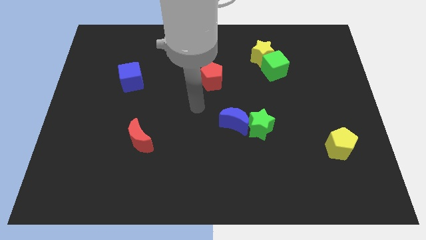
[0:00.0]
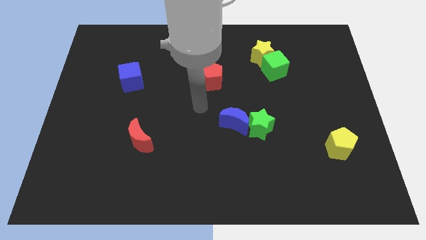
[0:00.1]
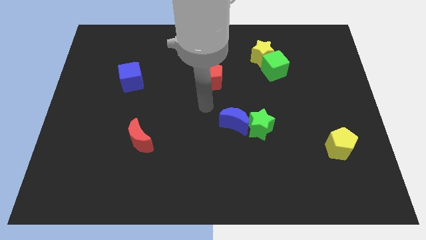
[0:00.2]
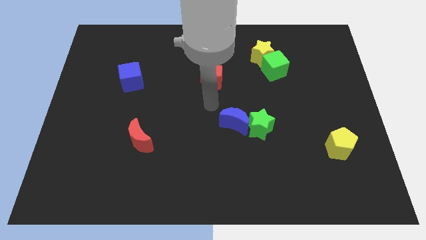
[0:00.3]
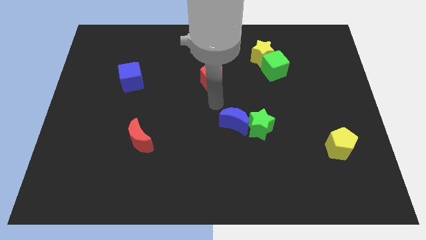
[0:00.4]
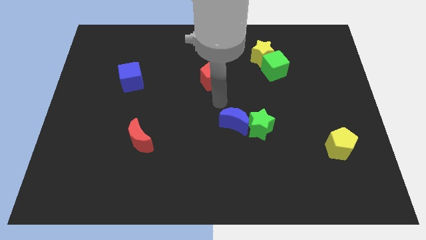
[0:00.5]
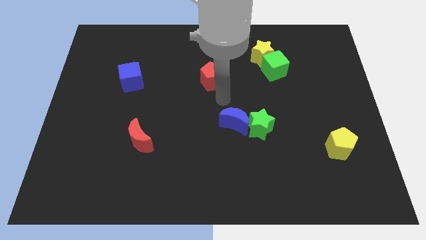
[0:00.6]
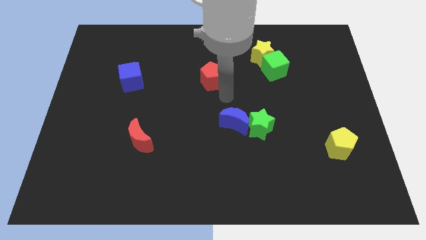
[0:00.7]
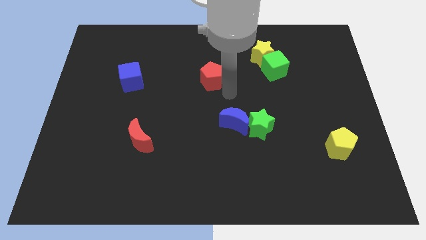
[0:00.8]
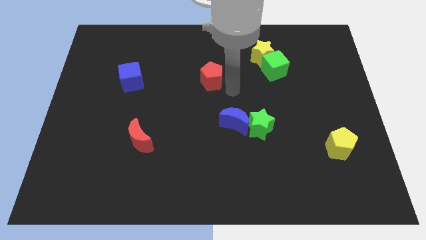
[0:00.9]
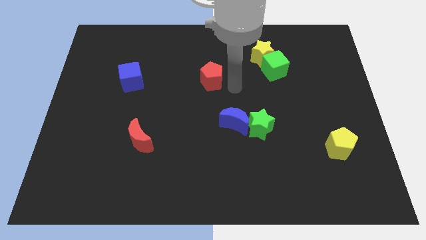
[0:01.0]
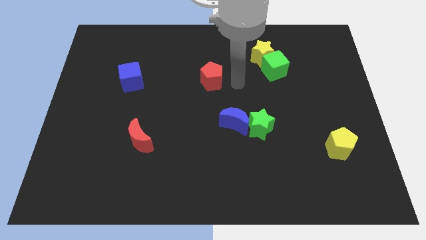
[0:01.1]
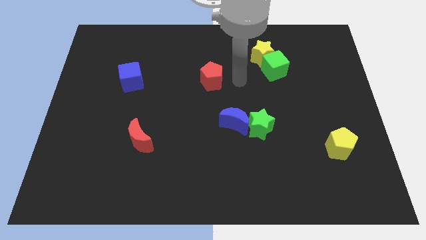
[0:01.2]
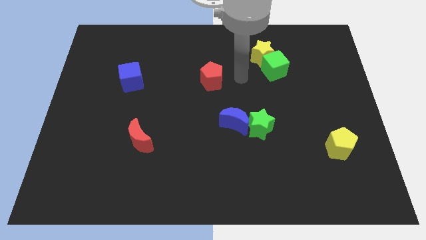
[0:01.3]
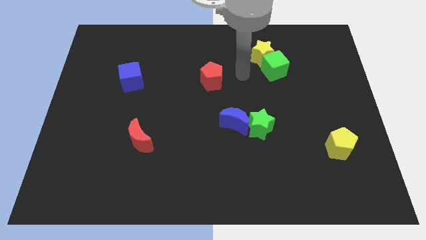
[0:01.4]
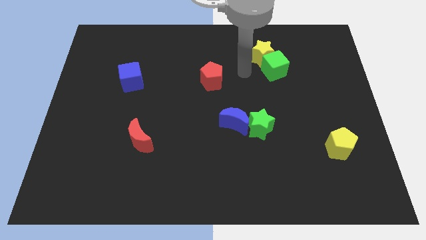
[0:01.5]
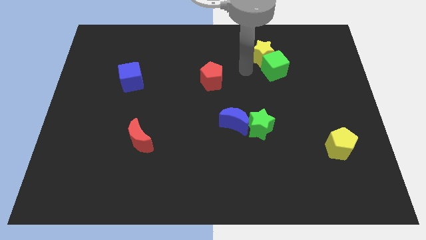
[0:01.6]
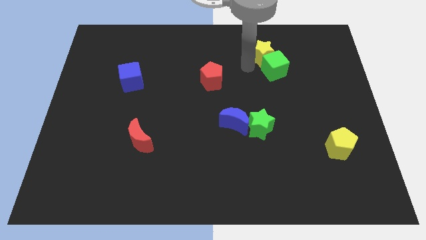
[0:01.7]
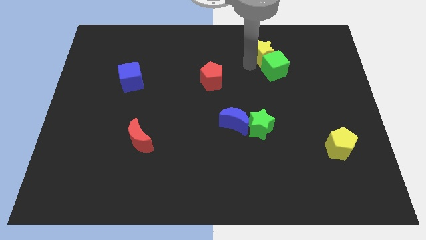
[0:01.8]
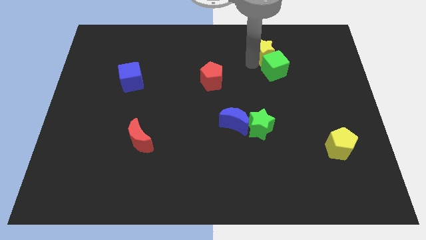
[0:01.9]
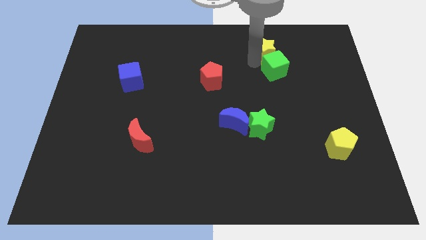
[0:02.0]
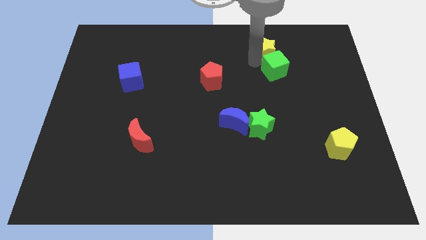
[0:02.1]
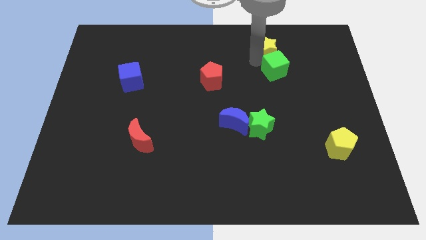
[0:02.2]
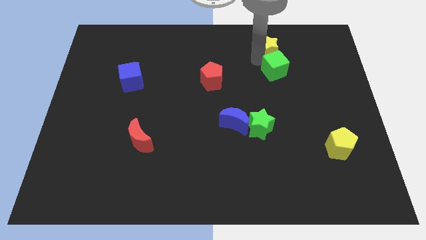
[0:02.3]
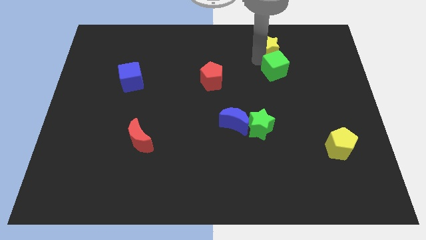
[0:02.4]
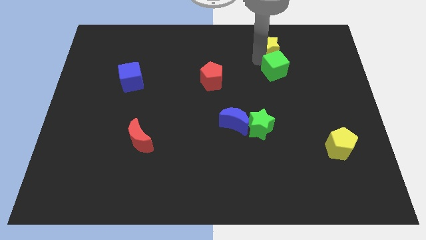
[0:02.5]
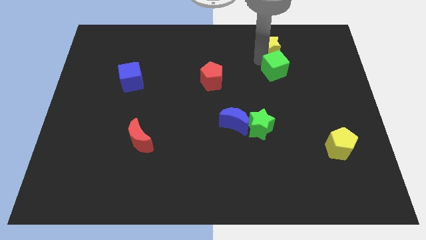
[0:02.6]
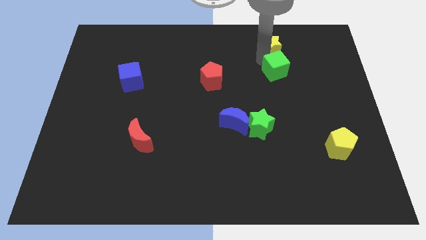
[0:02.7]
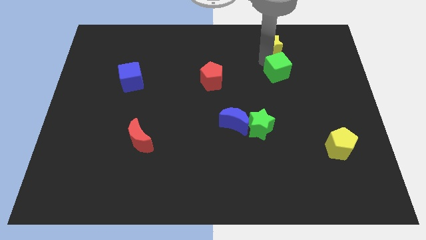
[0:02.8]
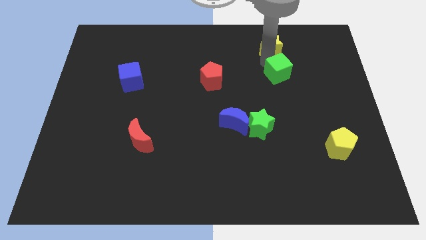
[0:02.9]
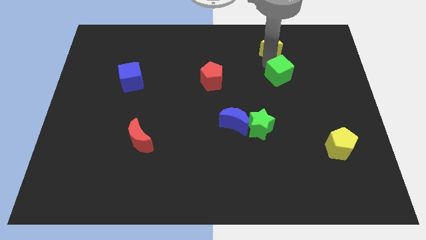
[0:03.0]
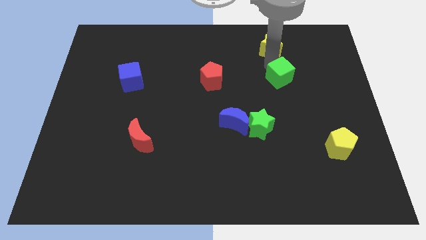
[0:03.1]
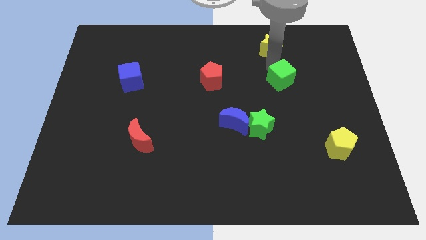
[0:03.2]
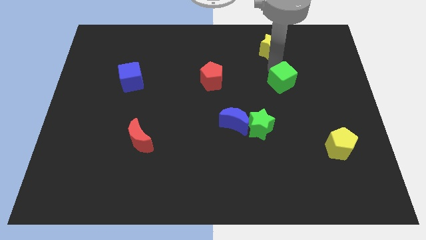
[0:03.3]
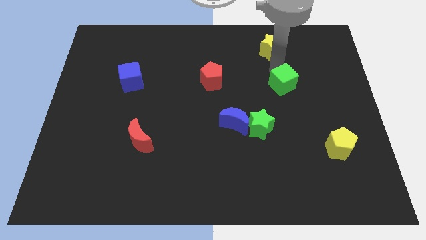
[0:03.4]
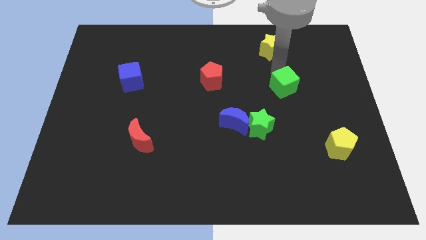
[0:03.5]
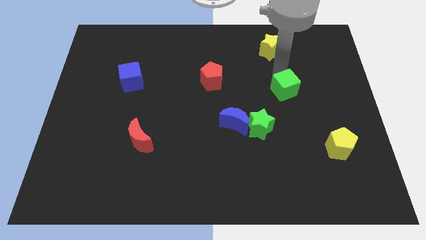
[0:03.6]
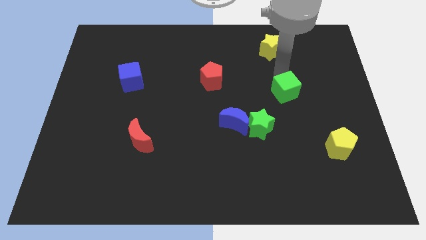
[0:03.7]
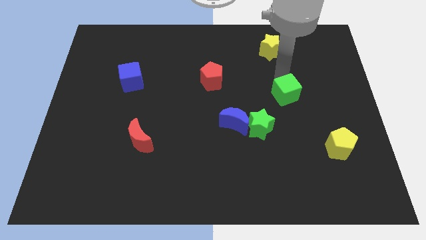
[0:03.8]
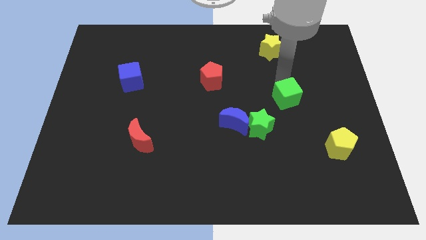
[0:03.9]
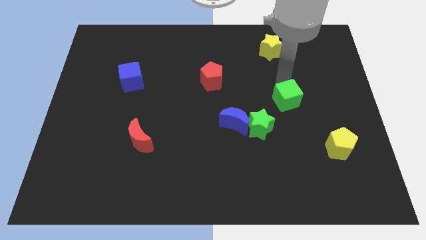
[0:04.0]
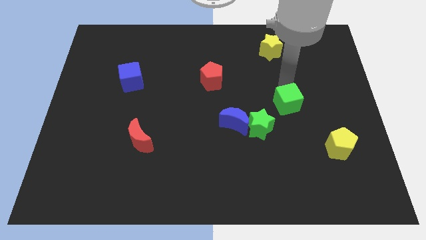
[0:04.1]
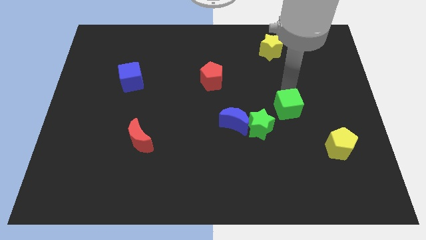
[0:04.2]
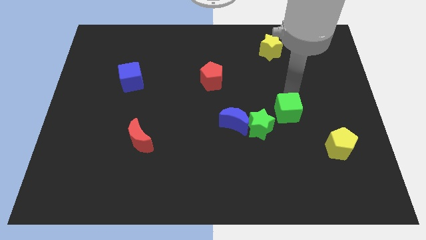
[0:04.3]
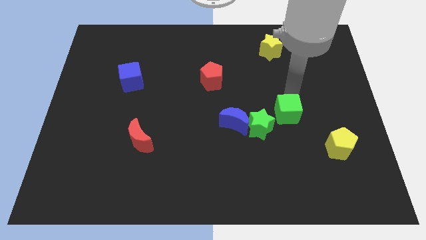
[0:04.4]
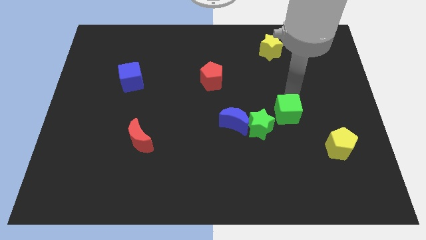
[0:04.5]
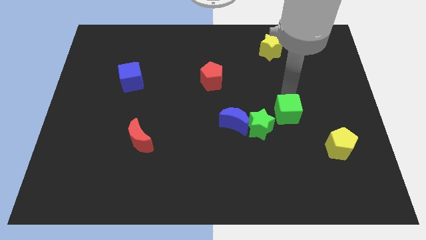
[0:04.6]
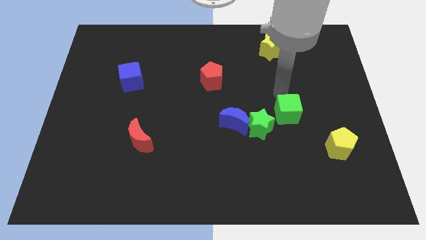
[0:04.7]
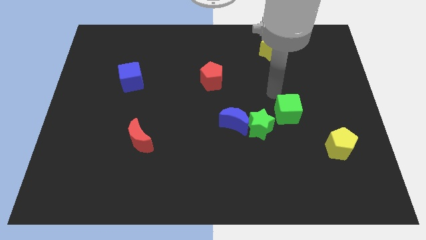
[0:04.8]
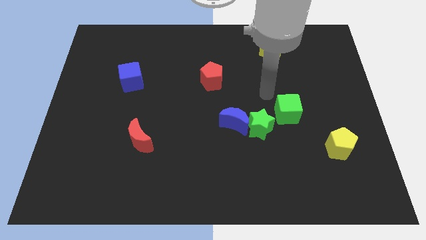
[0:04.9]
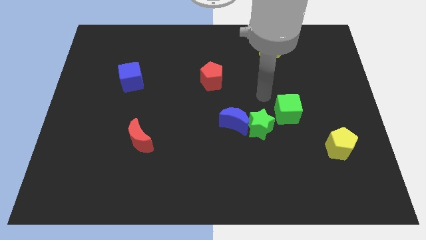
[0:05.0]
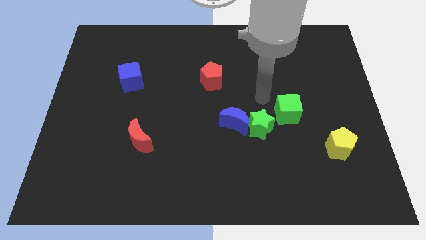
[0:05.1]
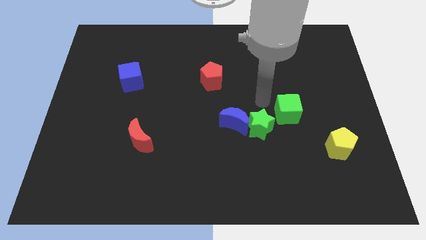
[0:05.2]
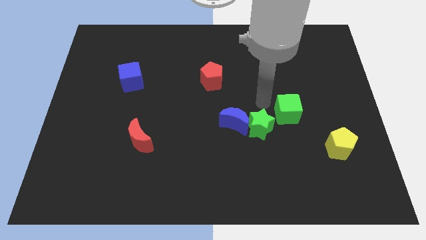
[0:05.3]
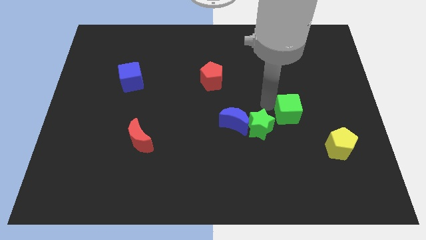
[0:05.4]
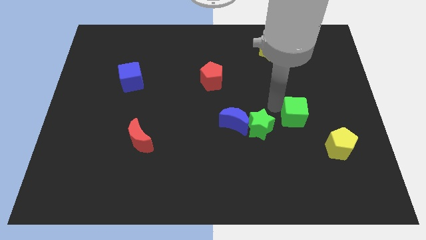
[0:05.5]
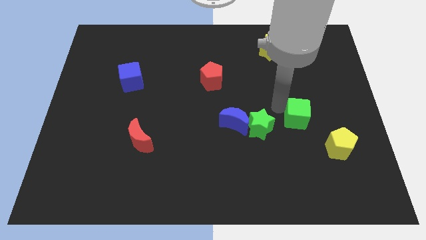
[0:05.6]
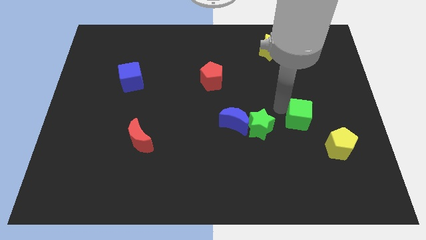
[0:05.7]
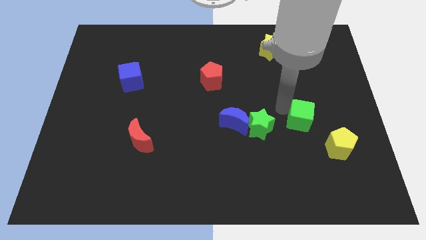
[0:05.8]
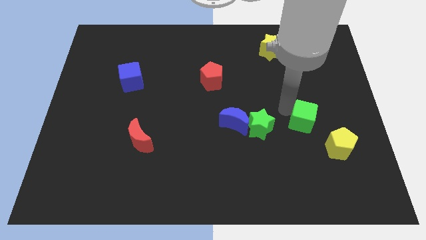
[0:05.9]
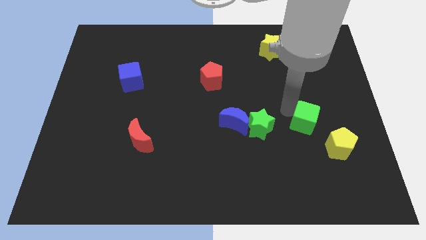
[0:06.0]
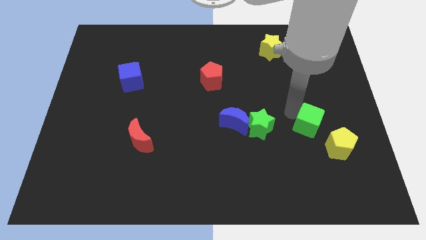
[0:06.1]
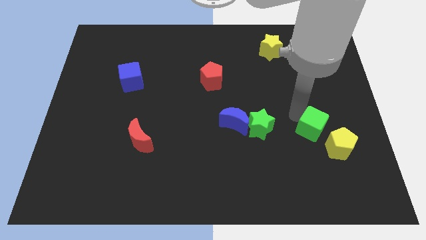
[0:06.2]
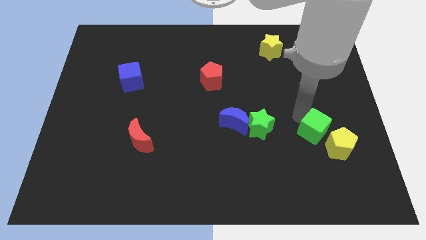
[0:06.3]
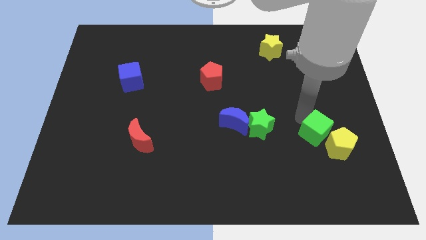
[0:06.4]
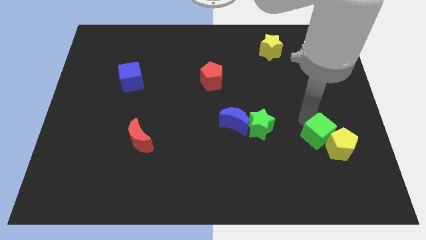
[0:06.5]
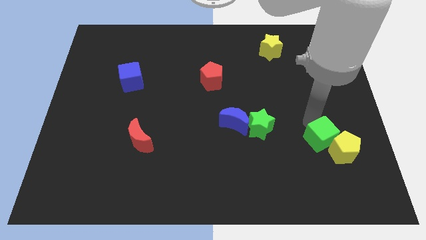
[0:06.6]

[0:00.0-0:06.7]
push the green cube next to the yellow pentagon

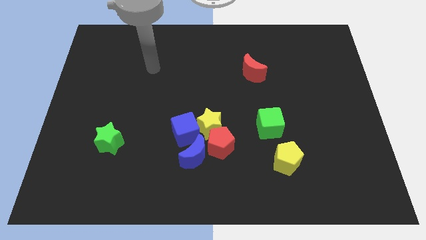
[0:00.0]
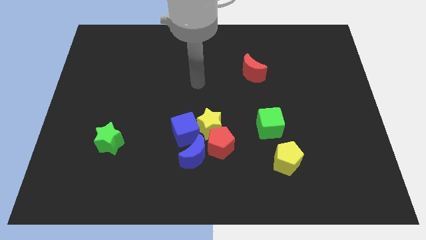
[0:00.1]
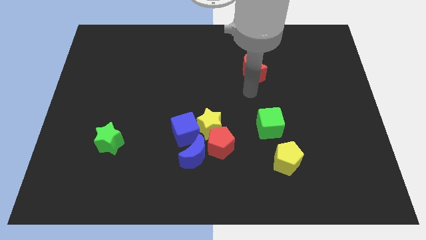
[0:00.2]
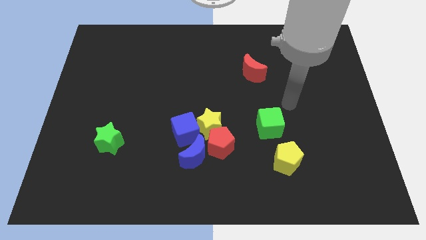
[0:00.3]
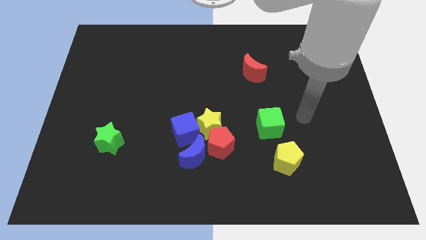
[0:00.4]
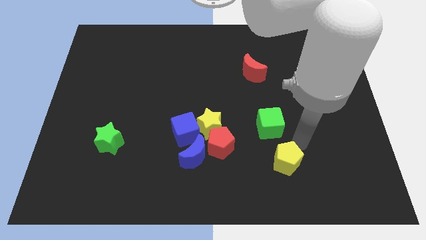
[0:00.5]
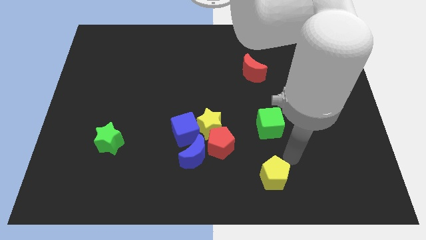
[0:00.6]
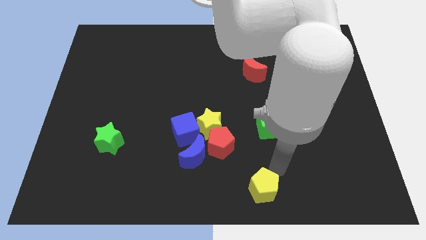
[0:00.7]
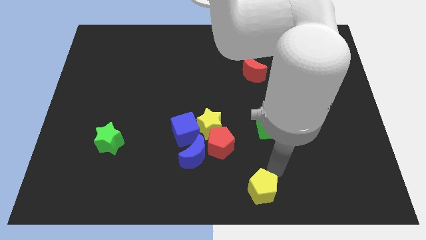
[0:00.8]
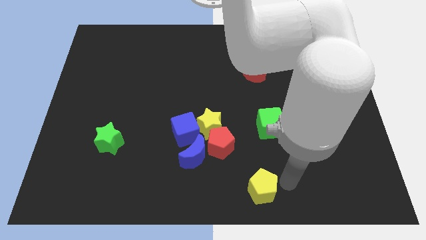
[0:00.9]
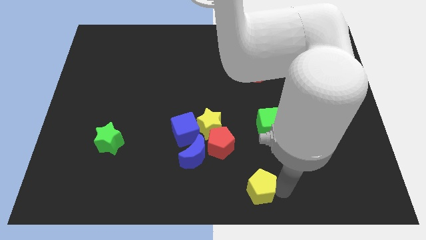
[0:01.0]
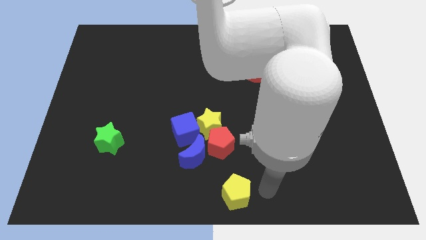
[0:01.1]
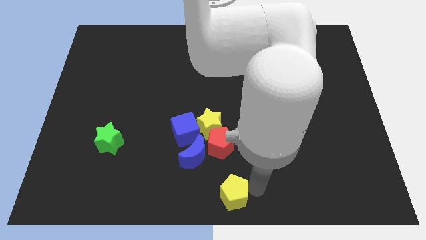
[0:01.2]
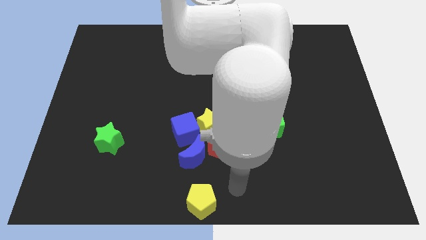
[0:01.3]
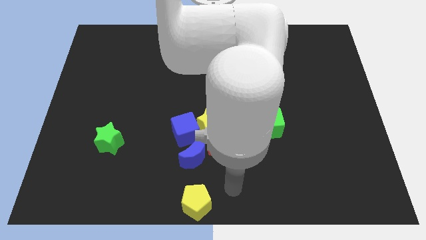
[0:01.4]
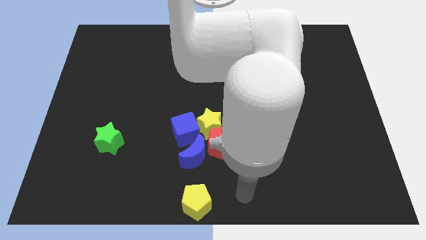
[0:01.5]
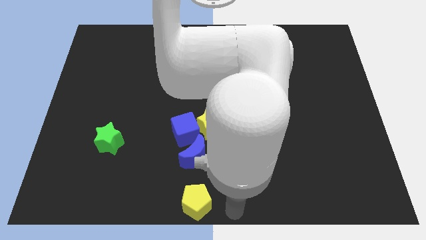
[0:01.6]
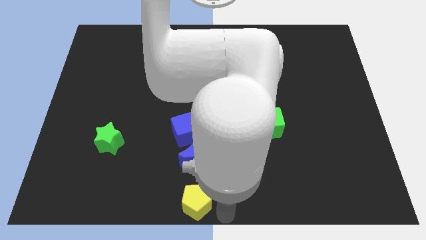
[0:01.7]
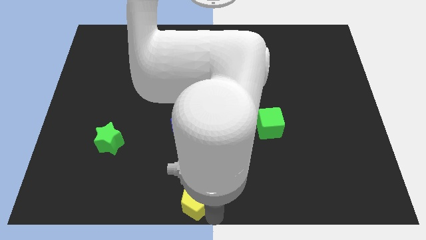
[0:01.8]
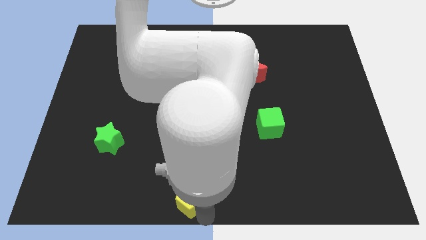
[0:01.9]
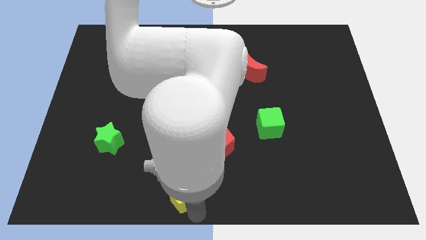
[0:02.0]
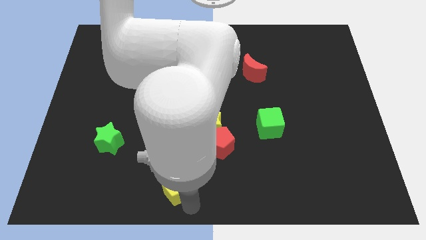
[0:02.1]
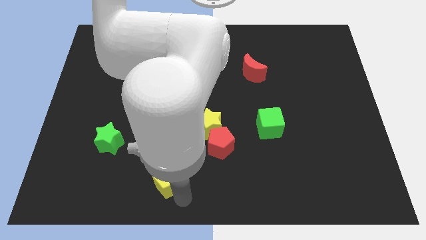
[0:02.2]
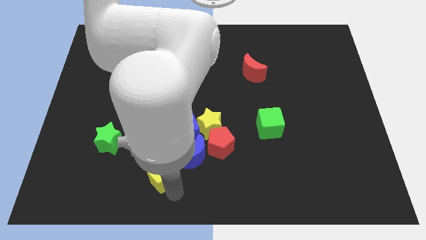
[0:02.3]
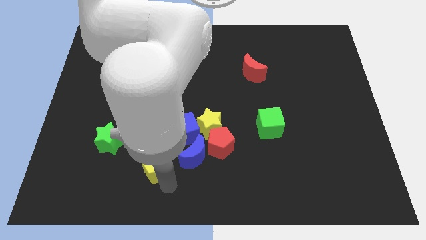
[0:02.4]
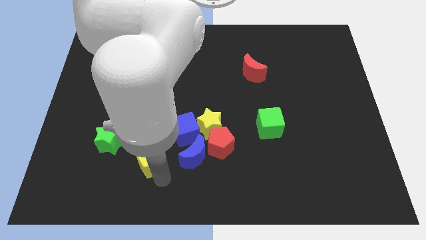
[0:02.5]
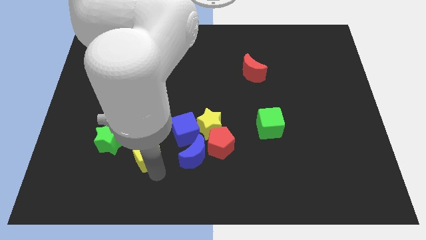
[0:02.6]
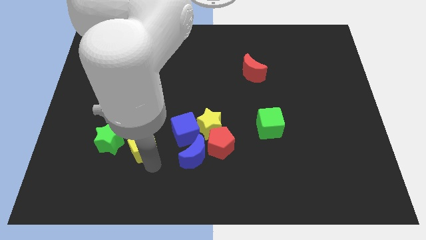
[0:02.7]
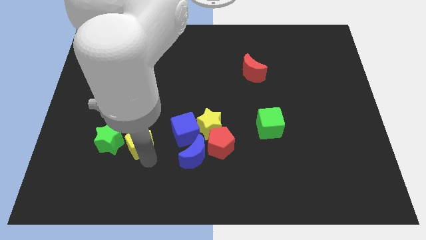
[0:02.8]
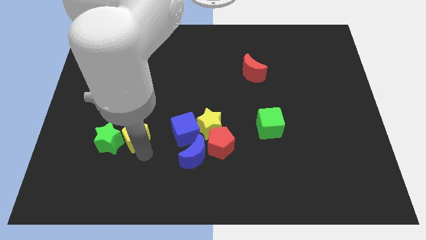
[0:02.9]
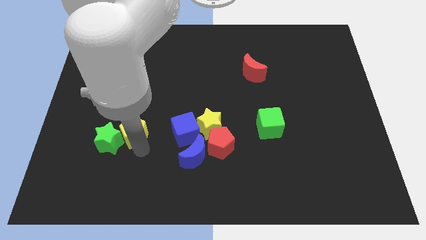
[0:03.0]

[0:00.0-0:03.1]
slide the yellow pentagon towards the green star
